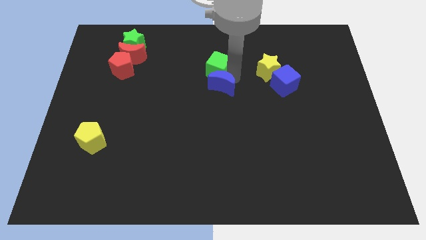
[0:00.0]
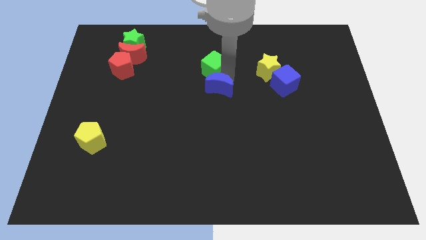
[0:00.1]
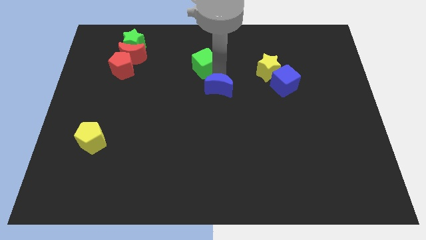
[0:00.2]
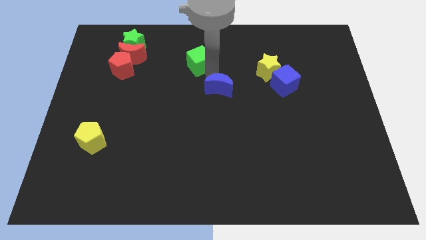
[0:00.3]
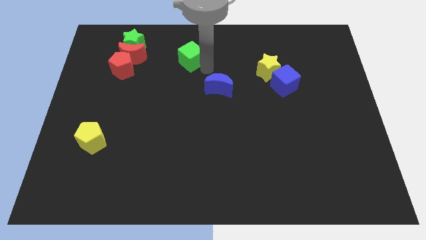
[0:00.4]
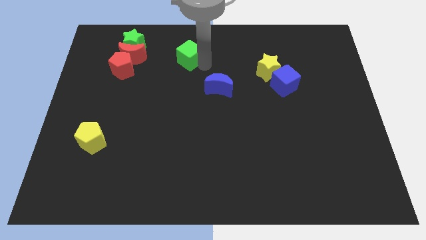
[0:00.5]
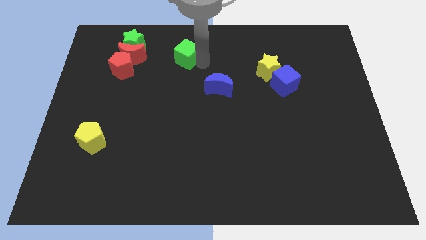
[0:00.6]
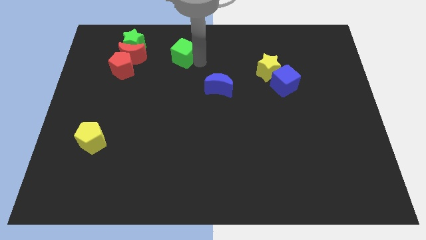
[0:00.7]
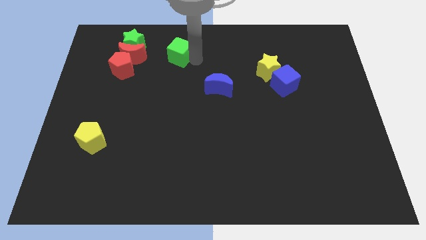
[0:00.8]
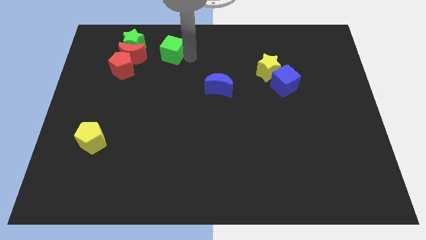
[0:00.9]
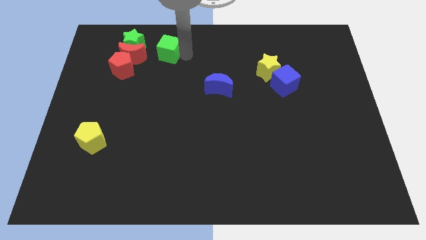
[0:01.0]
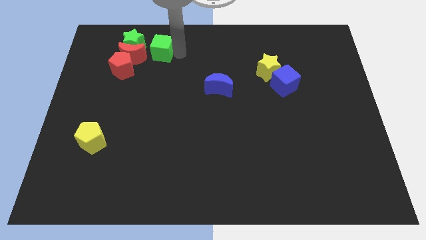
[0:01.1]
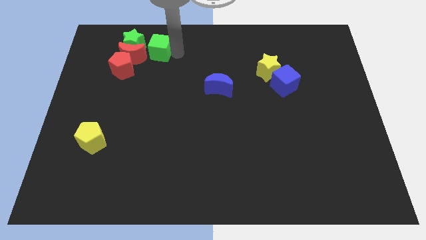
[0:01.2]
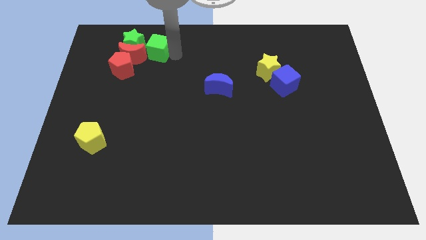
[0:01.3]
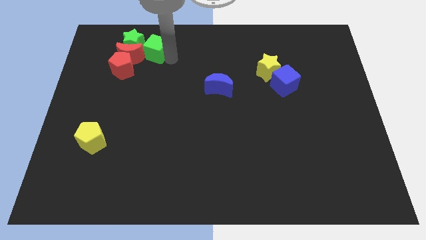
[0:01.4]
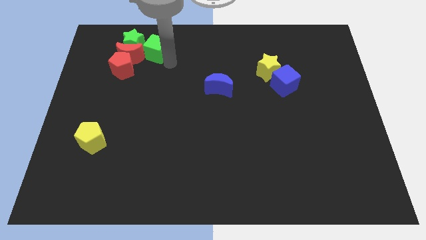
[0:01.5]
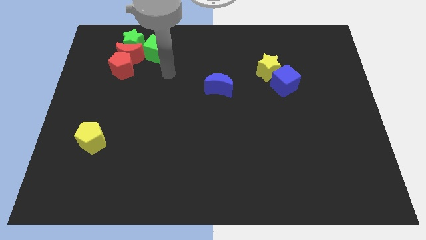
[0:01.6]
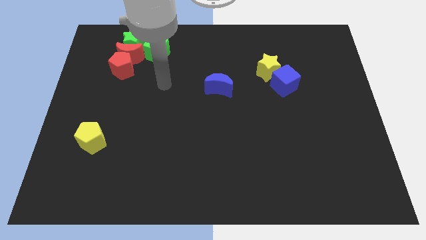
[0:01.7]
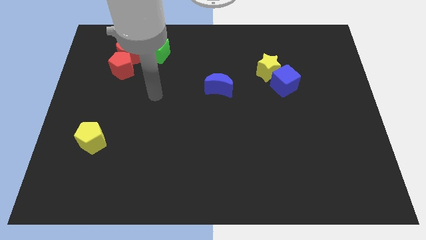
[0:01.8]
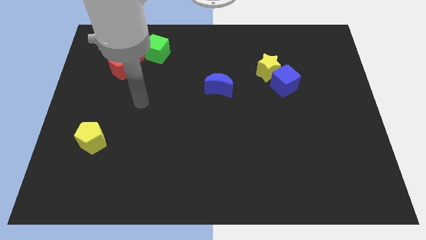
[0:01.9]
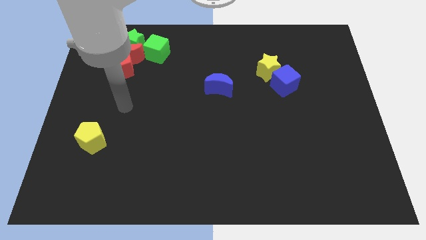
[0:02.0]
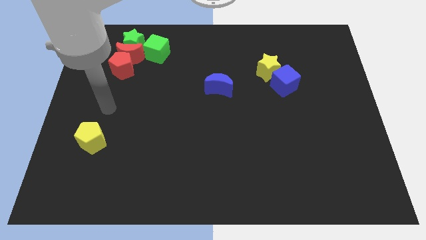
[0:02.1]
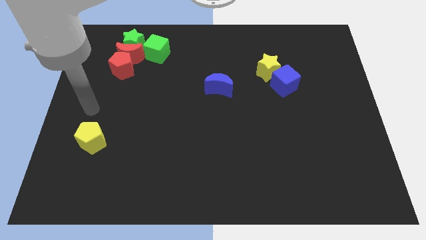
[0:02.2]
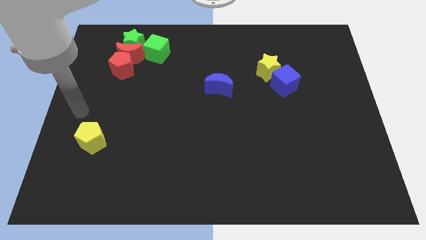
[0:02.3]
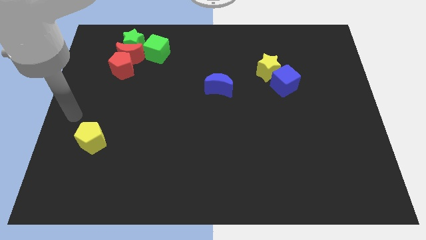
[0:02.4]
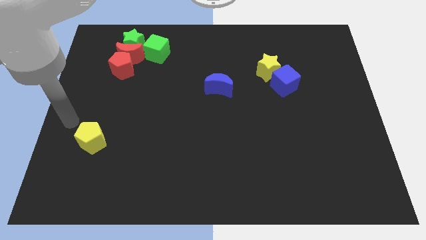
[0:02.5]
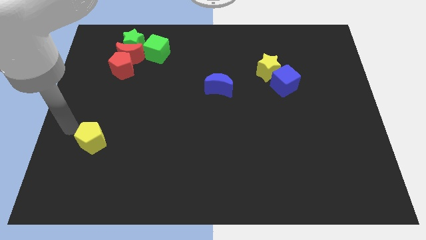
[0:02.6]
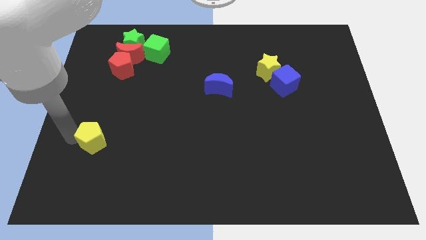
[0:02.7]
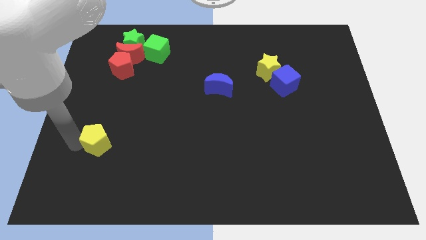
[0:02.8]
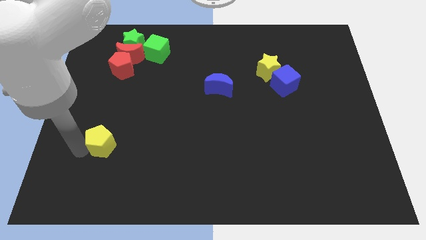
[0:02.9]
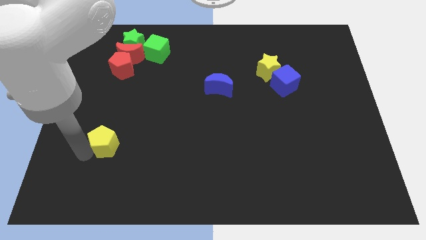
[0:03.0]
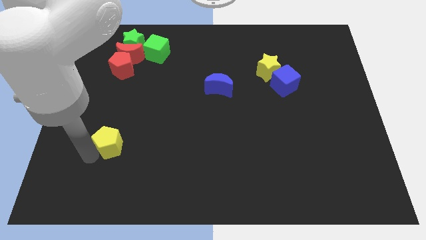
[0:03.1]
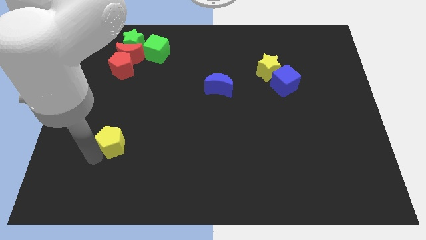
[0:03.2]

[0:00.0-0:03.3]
separate the green cube and blue moon

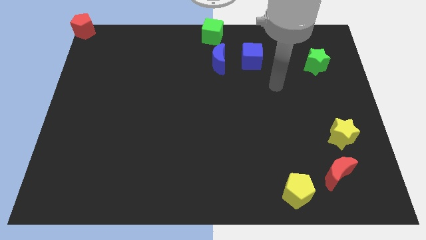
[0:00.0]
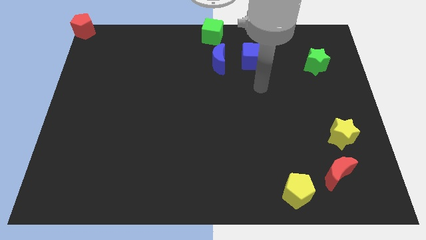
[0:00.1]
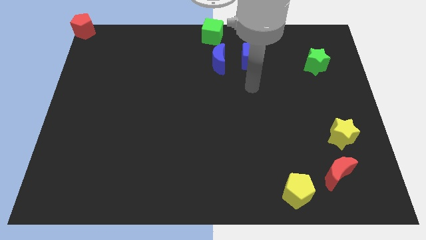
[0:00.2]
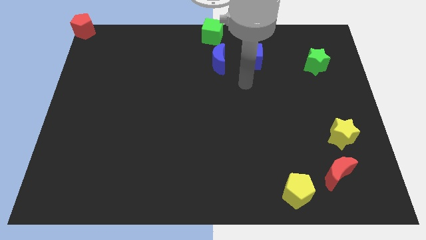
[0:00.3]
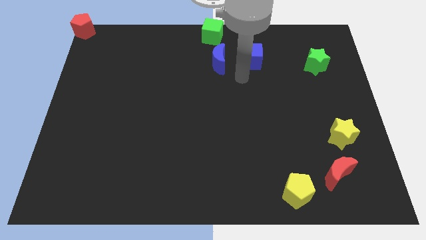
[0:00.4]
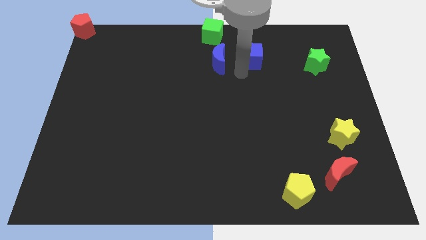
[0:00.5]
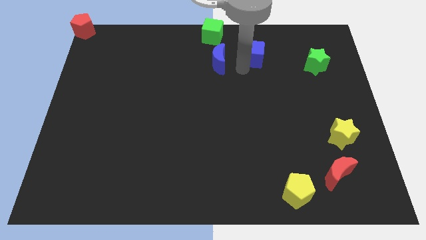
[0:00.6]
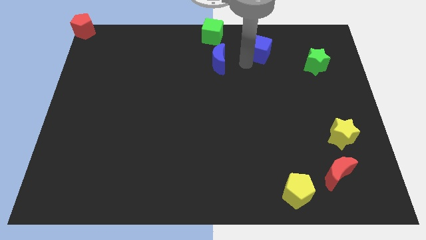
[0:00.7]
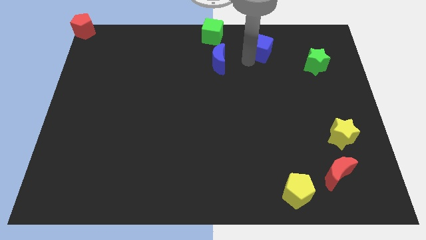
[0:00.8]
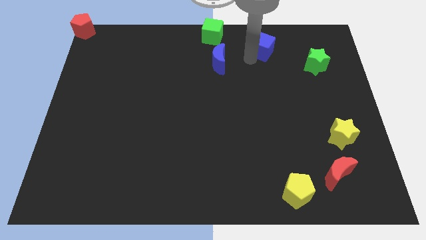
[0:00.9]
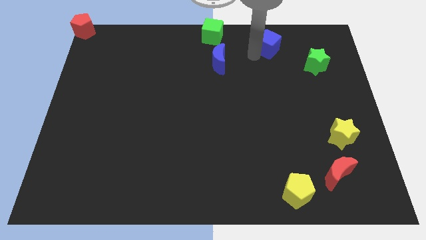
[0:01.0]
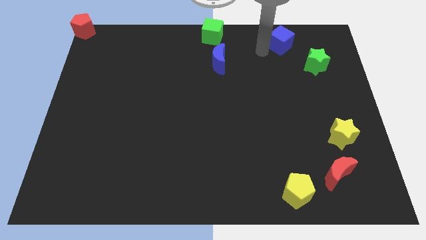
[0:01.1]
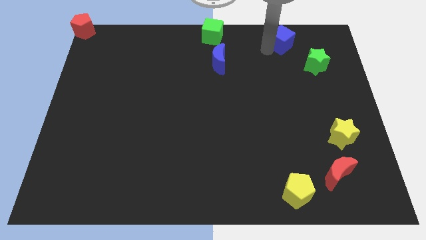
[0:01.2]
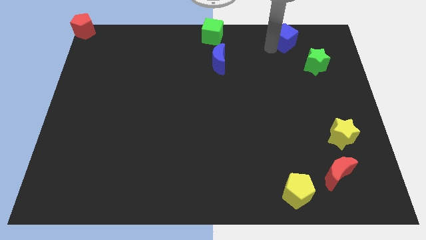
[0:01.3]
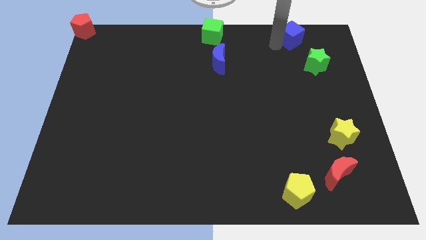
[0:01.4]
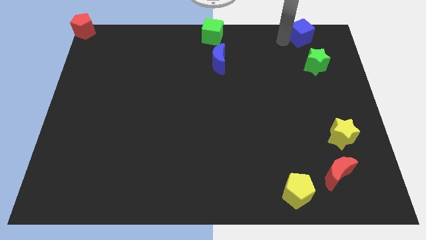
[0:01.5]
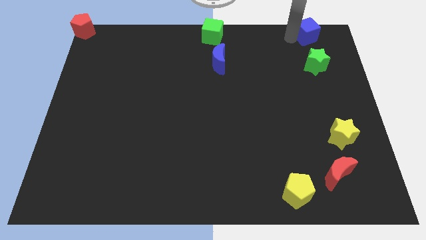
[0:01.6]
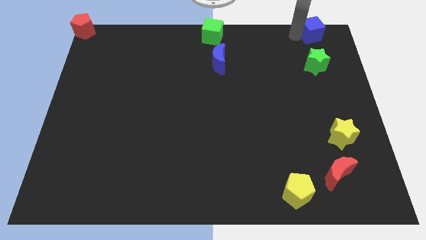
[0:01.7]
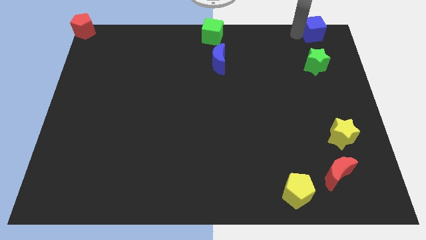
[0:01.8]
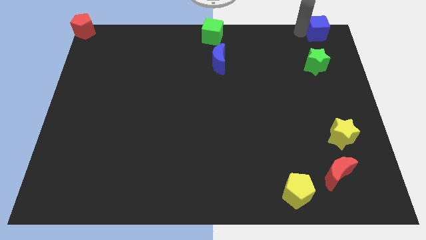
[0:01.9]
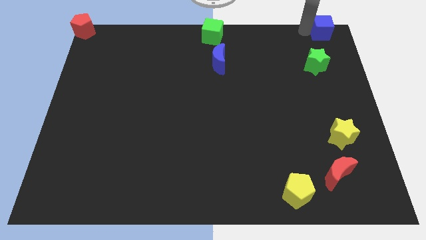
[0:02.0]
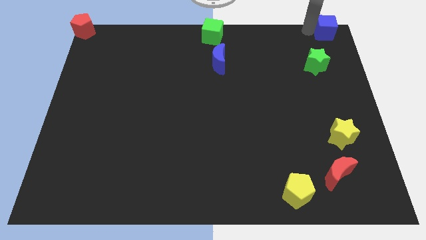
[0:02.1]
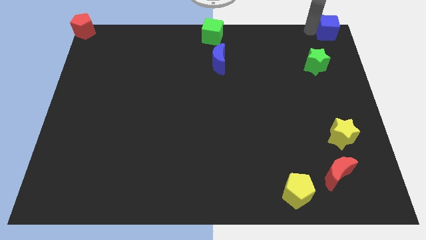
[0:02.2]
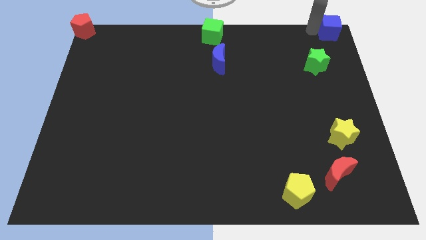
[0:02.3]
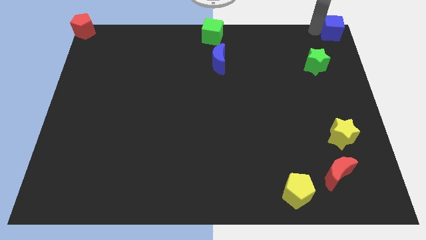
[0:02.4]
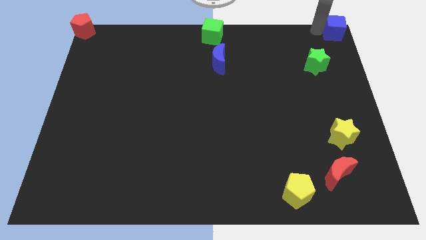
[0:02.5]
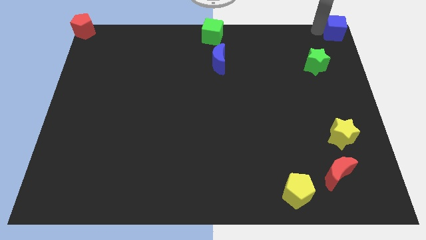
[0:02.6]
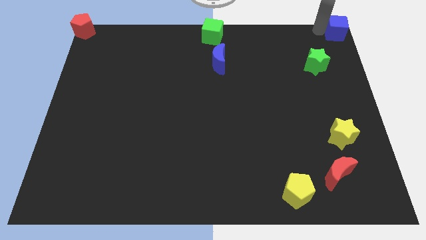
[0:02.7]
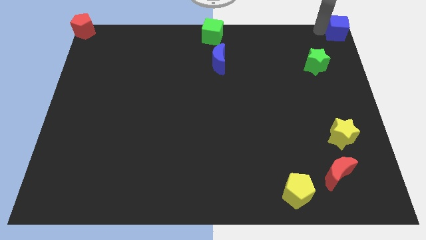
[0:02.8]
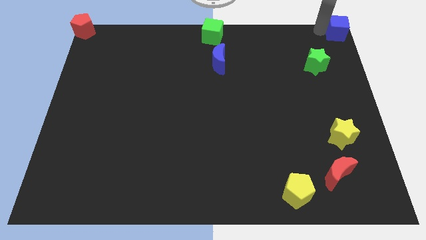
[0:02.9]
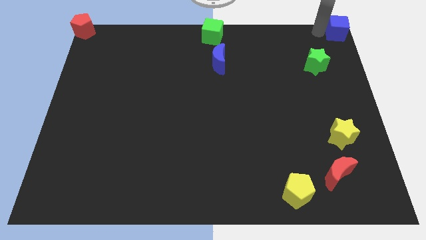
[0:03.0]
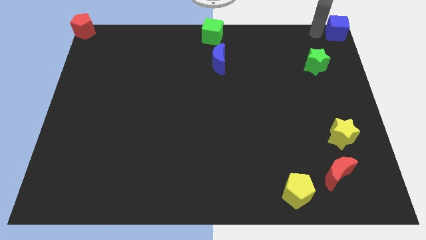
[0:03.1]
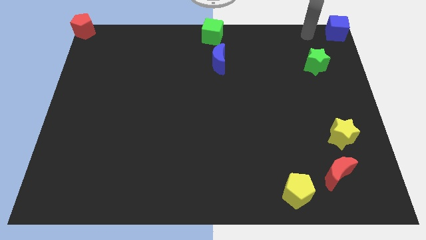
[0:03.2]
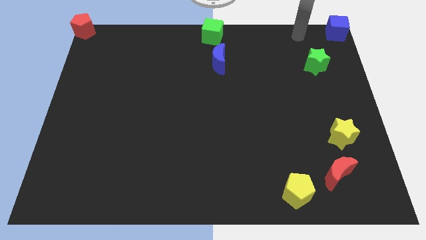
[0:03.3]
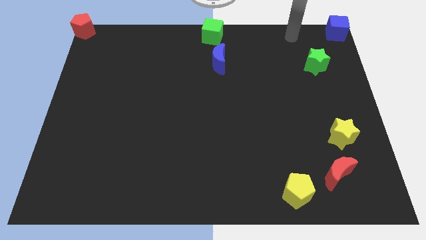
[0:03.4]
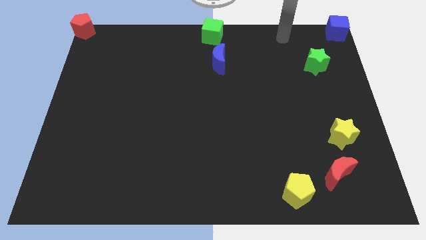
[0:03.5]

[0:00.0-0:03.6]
push the blue cube to the top right corner of the board

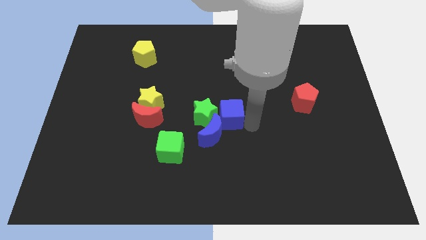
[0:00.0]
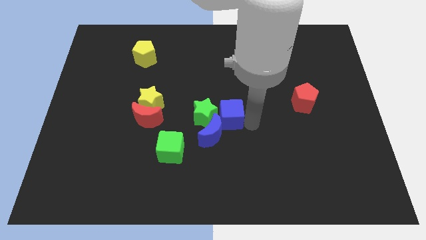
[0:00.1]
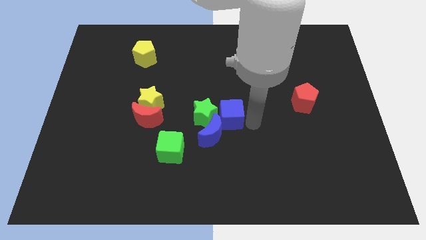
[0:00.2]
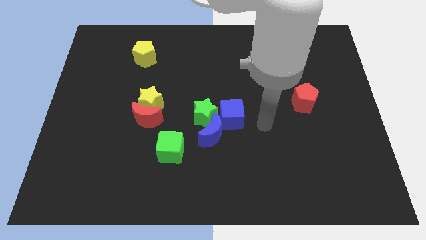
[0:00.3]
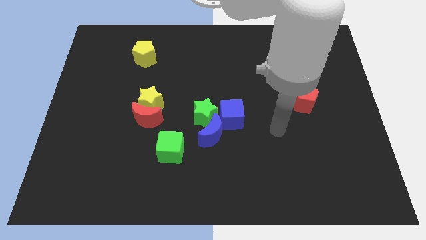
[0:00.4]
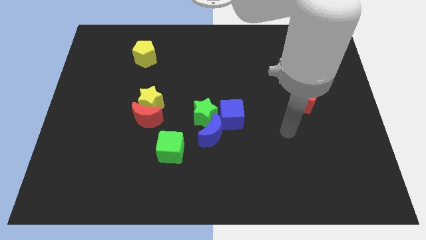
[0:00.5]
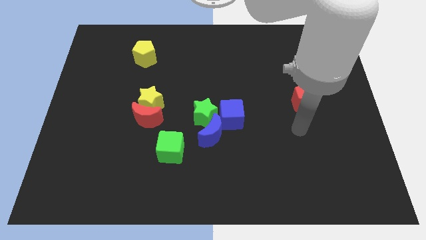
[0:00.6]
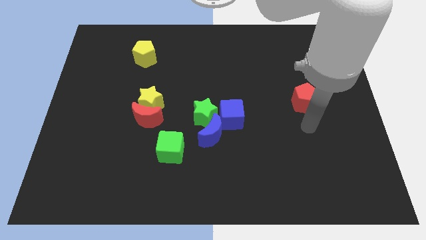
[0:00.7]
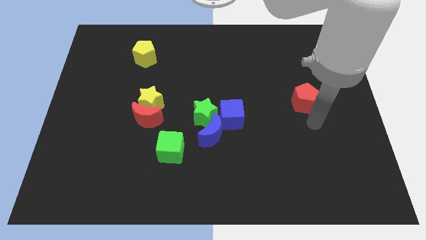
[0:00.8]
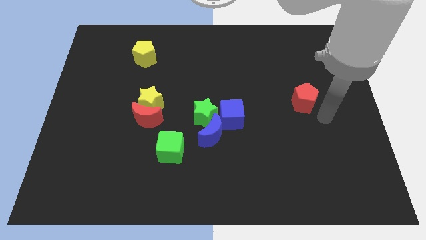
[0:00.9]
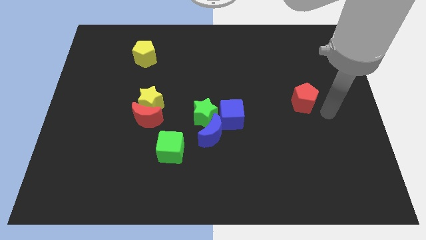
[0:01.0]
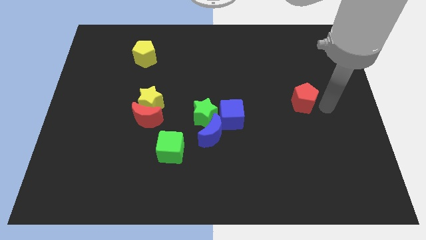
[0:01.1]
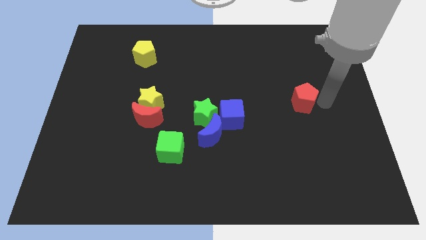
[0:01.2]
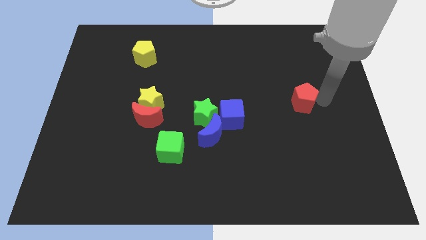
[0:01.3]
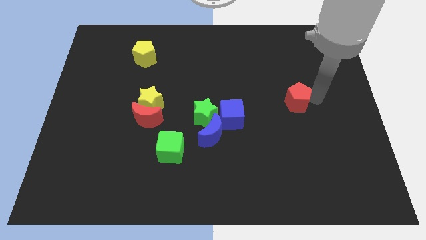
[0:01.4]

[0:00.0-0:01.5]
move your arm away from the blue cube

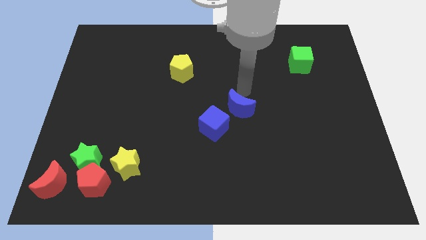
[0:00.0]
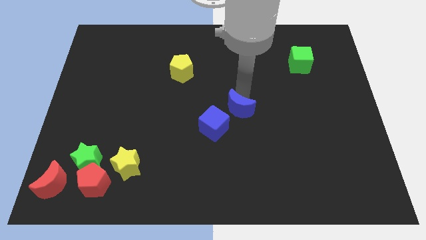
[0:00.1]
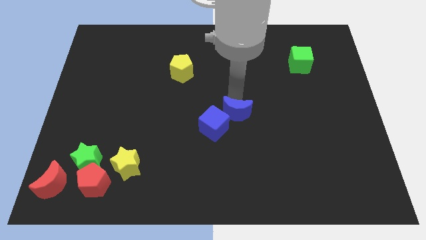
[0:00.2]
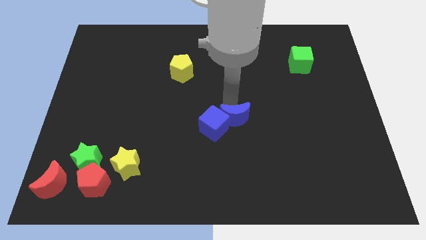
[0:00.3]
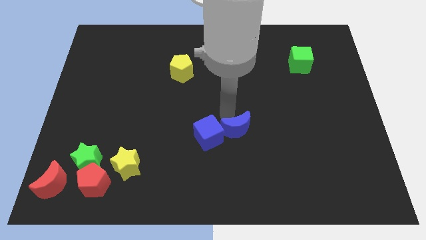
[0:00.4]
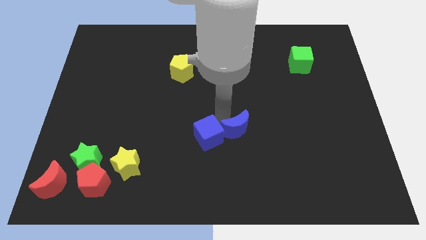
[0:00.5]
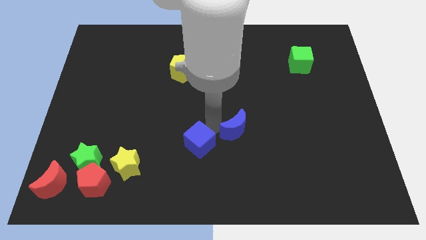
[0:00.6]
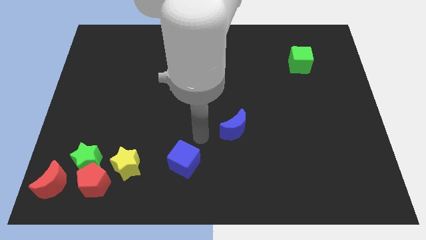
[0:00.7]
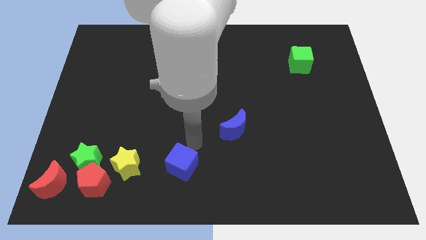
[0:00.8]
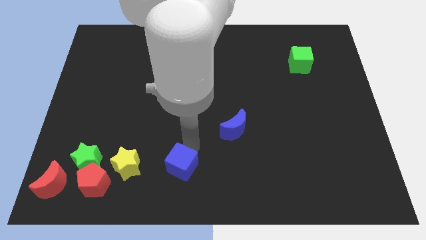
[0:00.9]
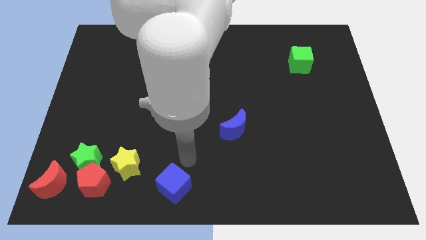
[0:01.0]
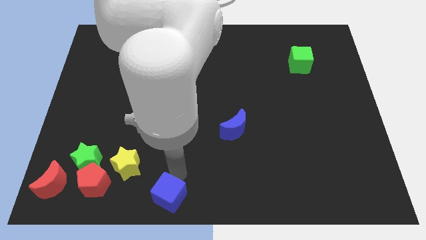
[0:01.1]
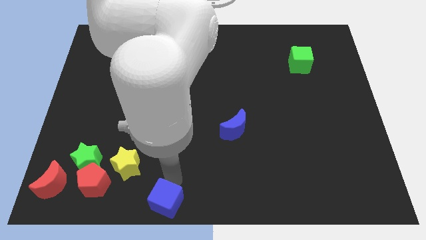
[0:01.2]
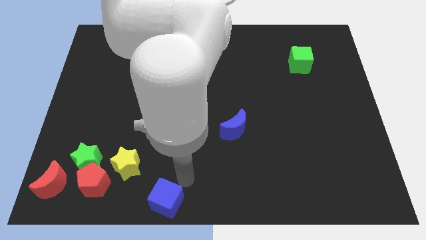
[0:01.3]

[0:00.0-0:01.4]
move blue cube to the right bottom of yellow star
